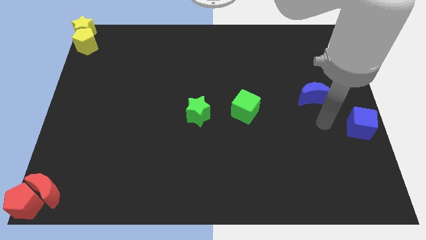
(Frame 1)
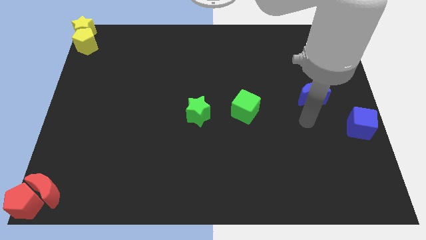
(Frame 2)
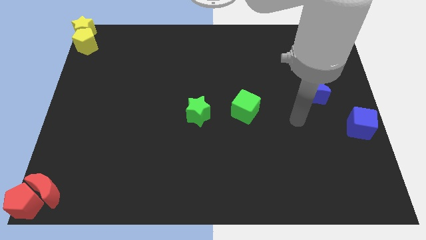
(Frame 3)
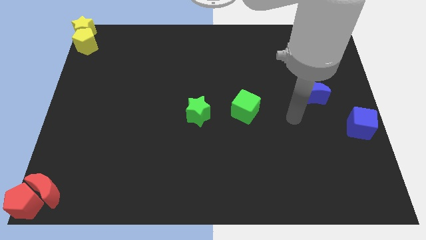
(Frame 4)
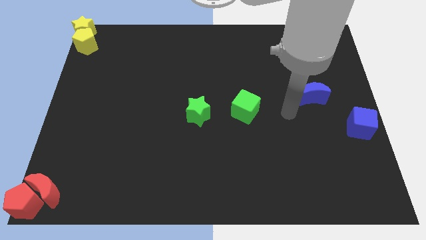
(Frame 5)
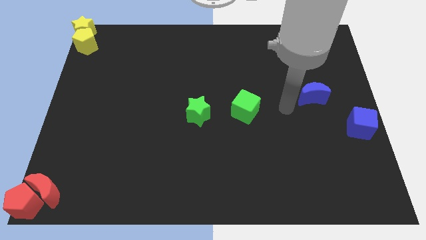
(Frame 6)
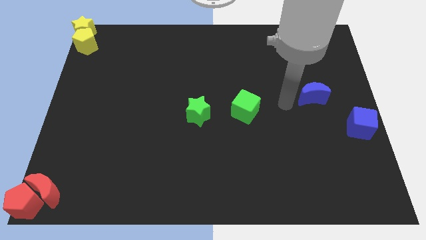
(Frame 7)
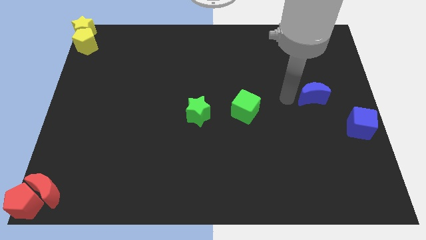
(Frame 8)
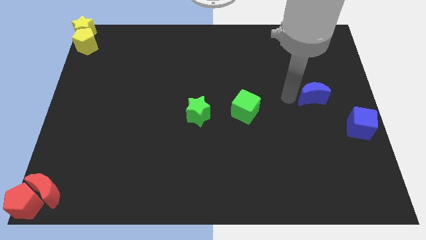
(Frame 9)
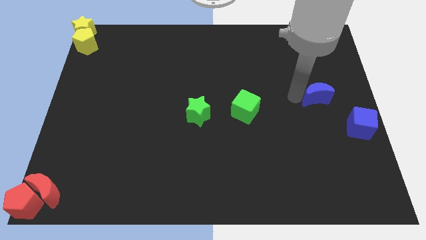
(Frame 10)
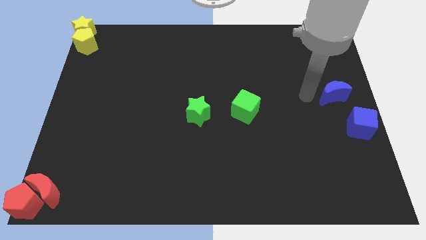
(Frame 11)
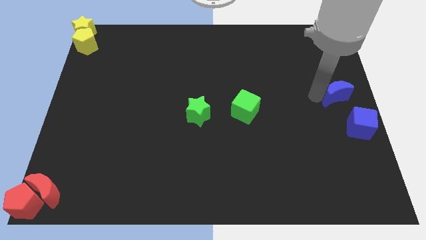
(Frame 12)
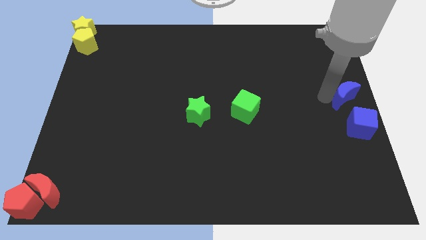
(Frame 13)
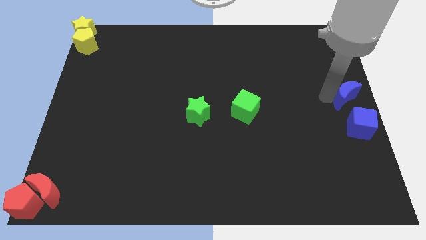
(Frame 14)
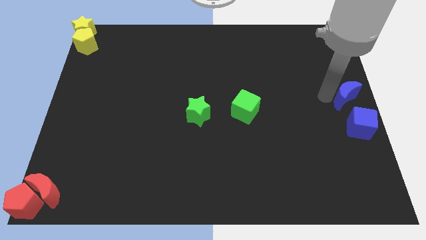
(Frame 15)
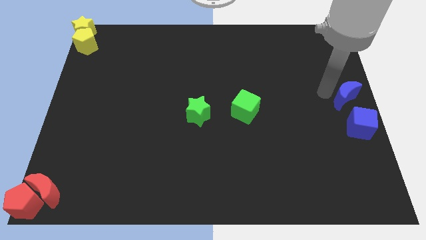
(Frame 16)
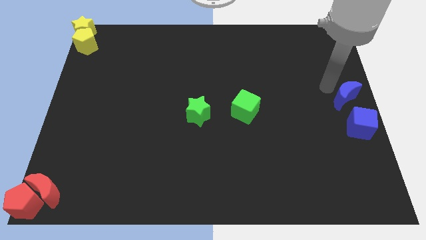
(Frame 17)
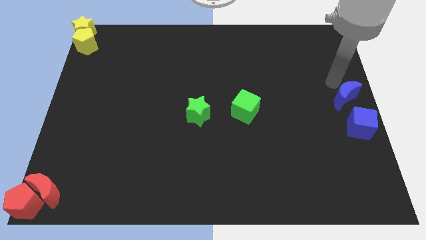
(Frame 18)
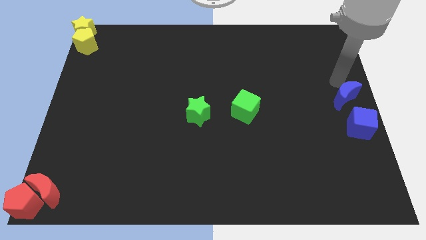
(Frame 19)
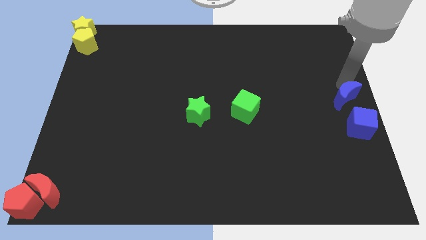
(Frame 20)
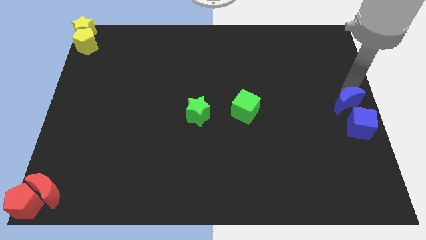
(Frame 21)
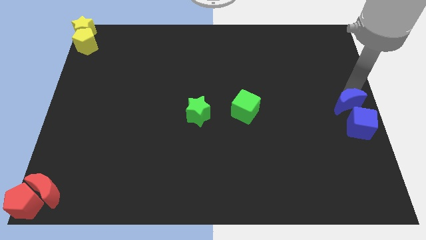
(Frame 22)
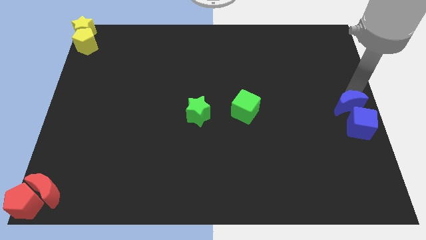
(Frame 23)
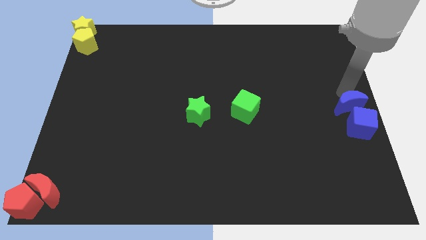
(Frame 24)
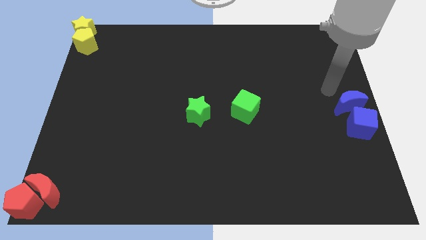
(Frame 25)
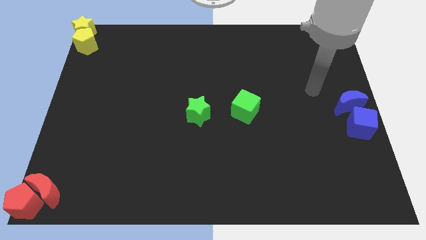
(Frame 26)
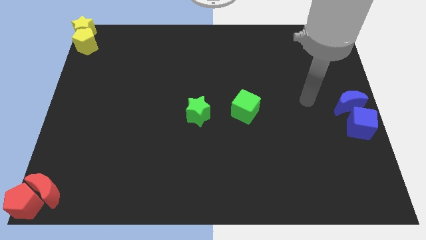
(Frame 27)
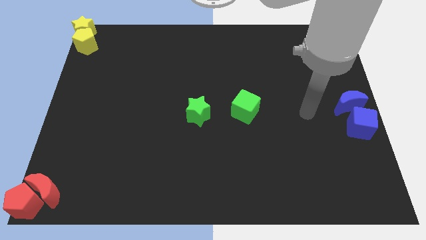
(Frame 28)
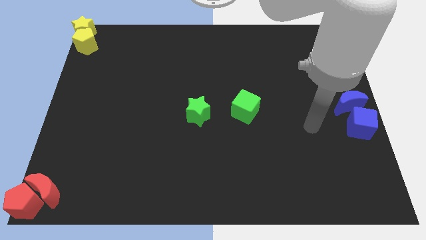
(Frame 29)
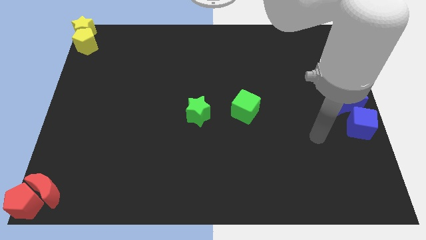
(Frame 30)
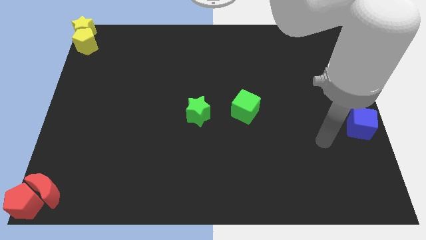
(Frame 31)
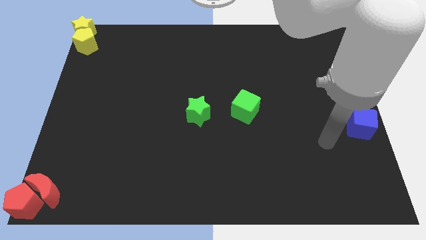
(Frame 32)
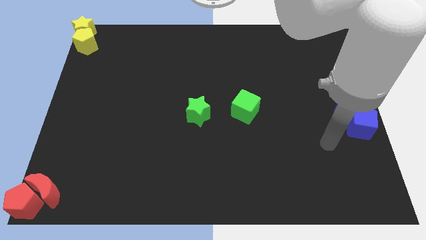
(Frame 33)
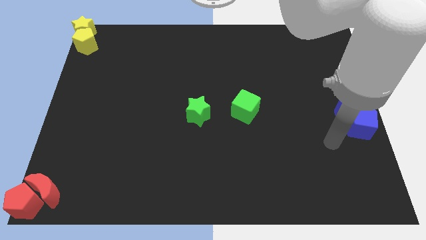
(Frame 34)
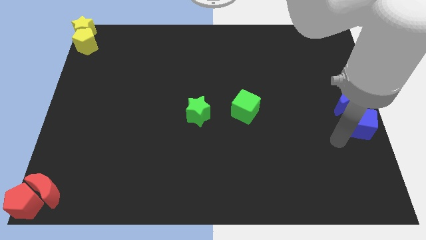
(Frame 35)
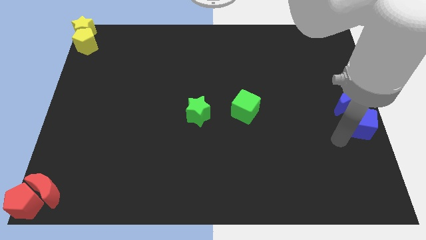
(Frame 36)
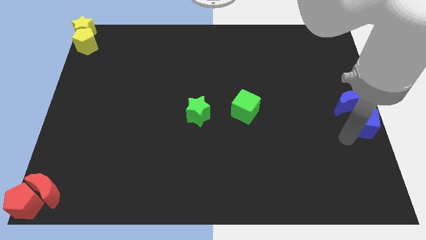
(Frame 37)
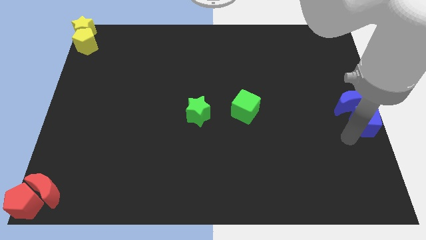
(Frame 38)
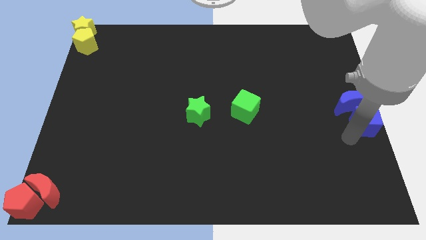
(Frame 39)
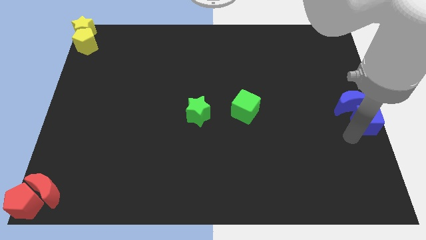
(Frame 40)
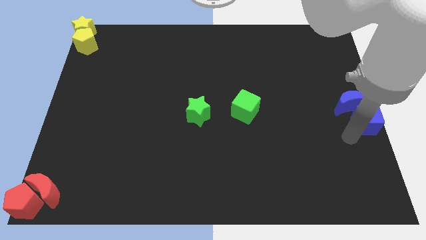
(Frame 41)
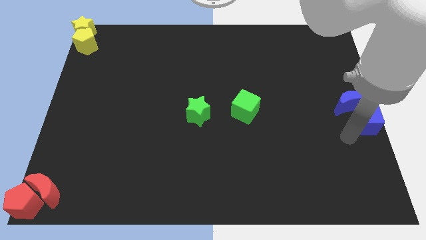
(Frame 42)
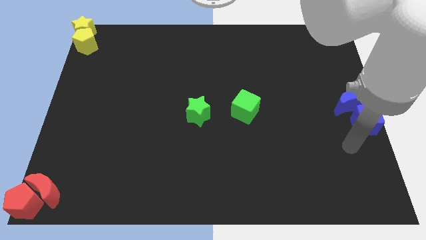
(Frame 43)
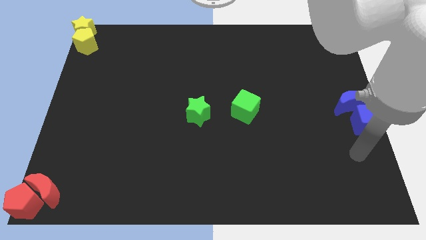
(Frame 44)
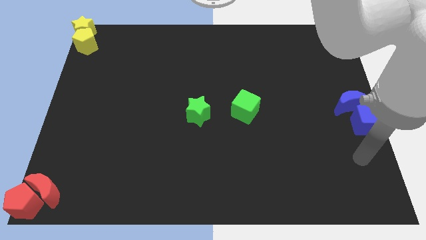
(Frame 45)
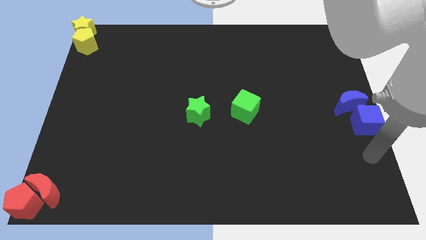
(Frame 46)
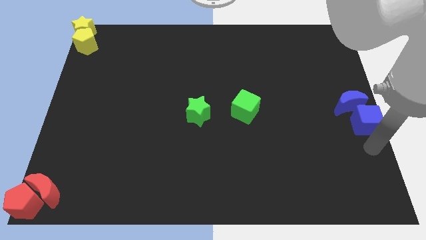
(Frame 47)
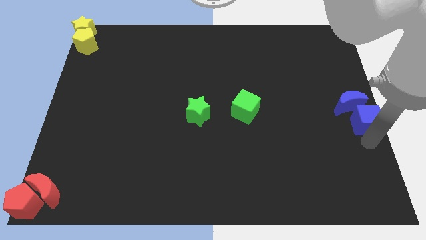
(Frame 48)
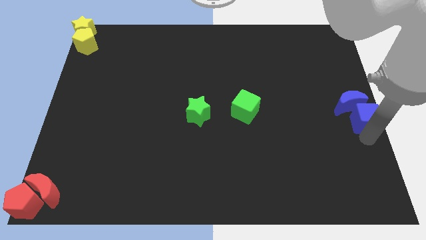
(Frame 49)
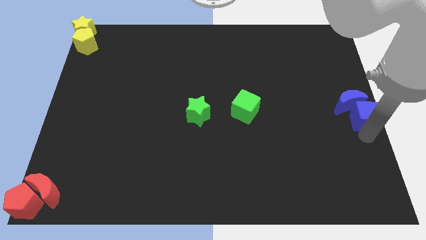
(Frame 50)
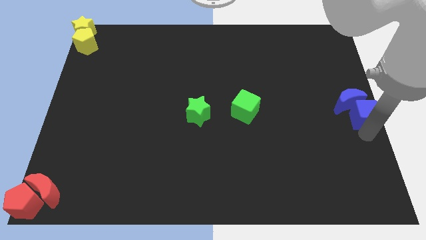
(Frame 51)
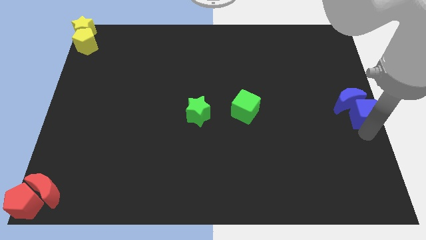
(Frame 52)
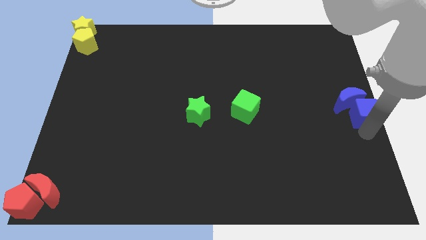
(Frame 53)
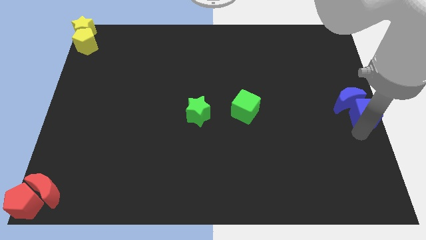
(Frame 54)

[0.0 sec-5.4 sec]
move the blue blocks to the right center of the board

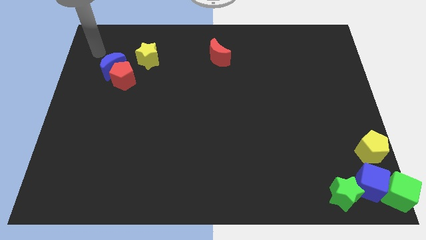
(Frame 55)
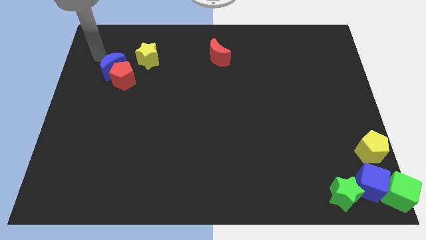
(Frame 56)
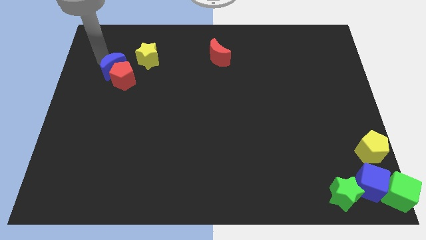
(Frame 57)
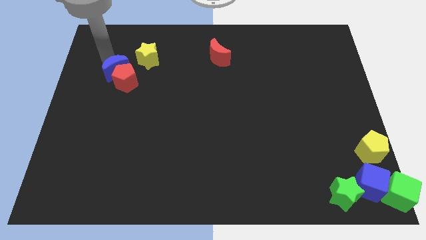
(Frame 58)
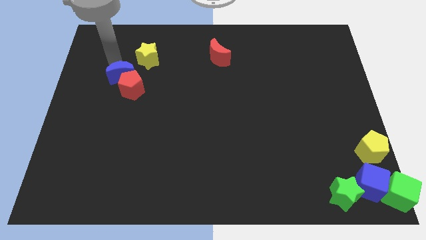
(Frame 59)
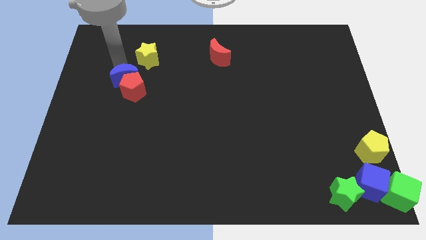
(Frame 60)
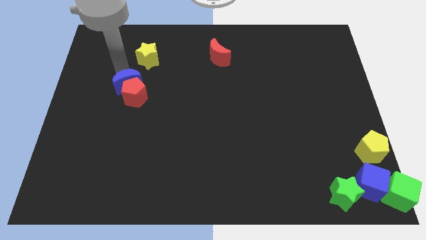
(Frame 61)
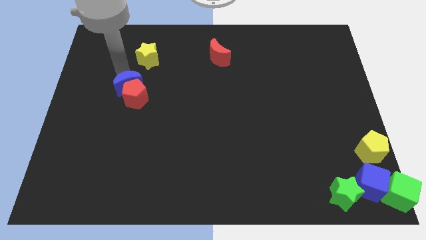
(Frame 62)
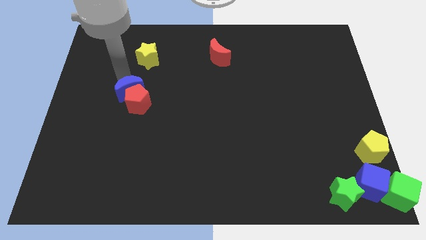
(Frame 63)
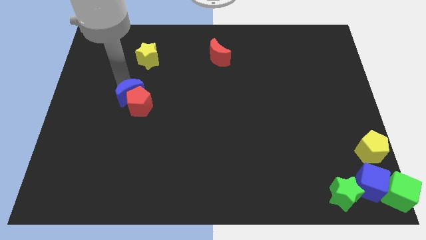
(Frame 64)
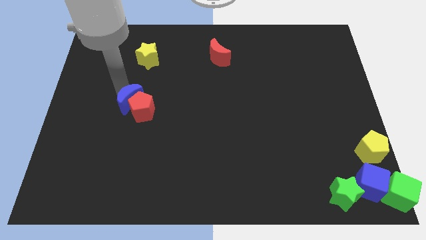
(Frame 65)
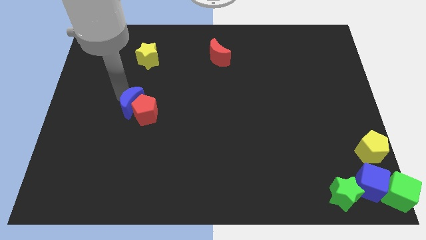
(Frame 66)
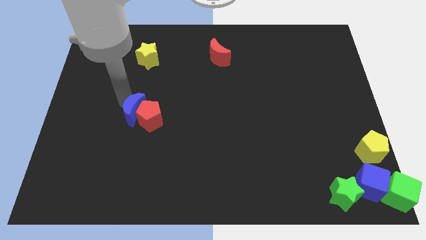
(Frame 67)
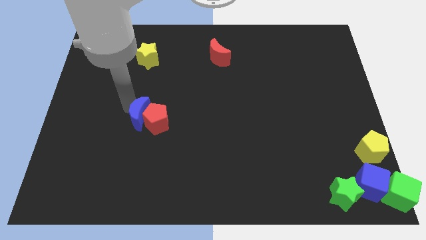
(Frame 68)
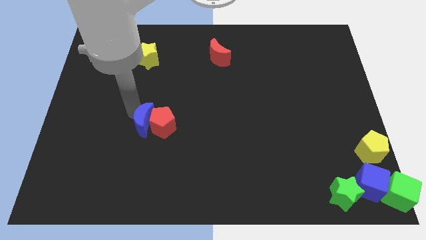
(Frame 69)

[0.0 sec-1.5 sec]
drag the blue moon and red pentagon towards the bottom side

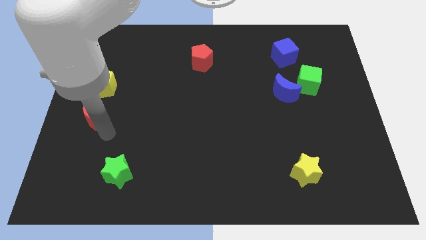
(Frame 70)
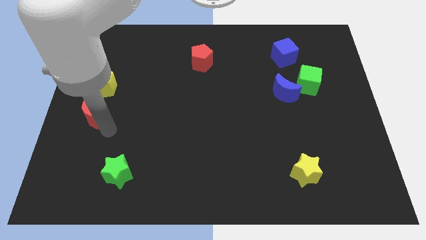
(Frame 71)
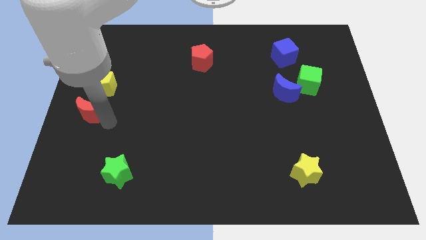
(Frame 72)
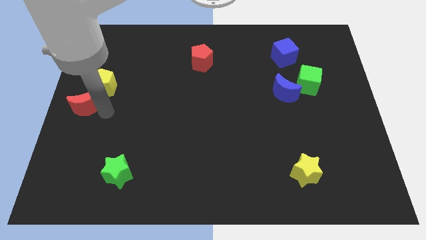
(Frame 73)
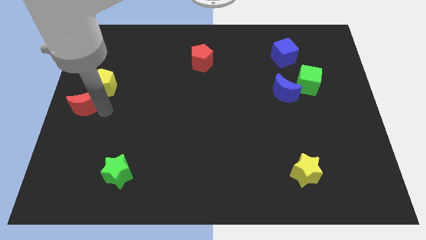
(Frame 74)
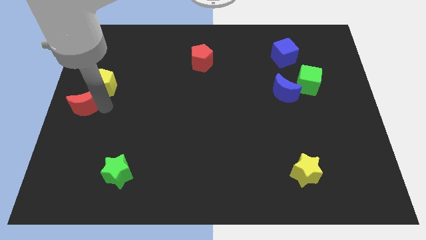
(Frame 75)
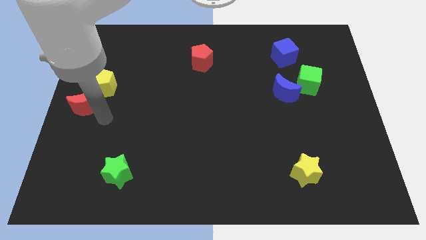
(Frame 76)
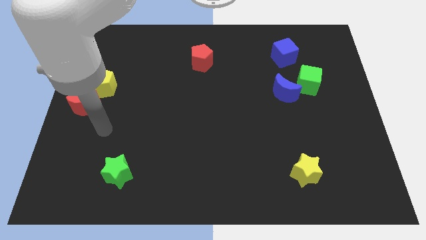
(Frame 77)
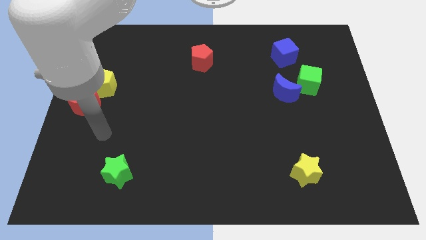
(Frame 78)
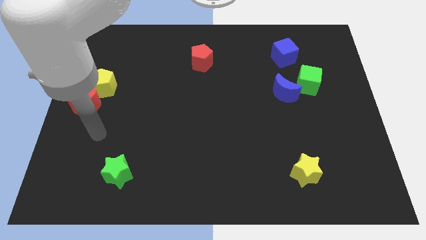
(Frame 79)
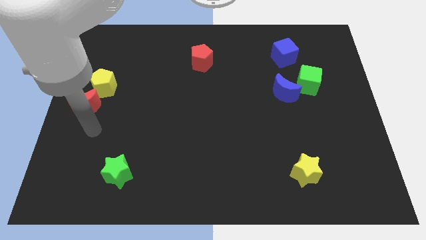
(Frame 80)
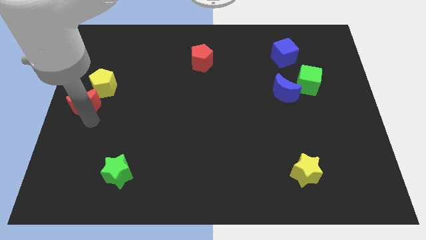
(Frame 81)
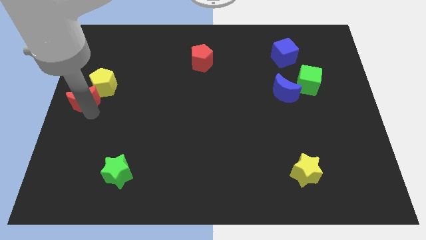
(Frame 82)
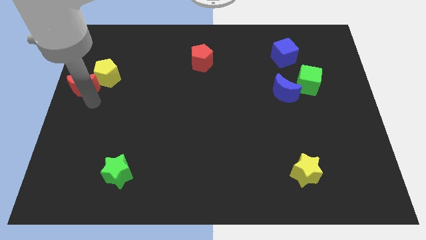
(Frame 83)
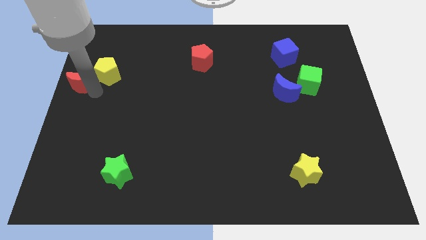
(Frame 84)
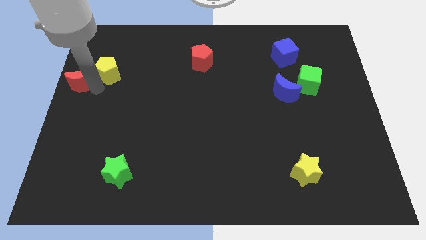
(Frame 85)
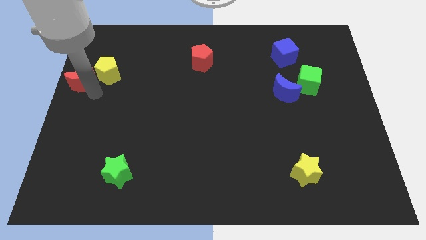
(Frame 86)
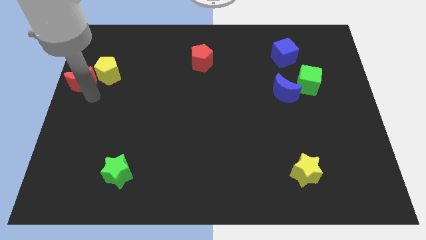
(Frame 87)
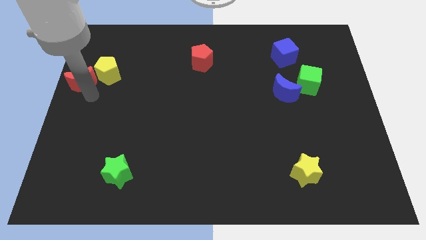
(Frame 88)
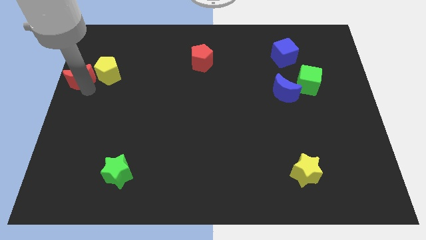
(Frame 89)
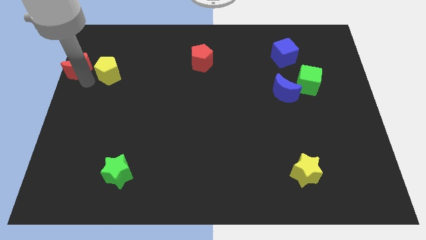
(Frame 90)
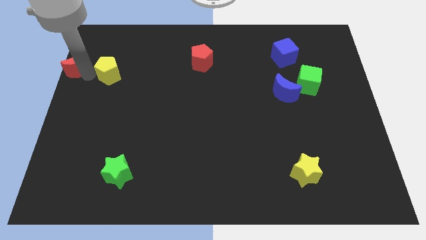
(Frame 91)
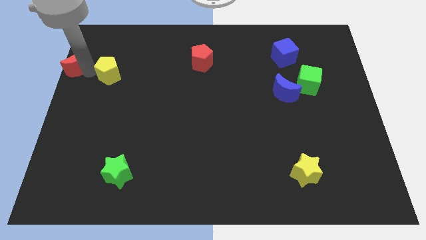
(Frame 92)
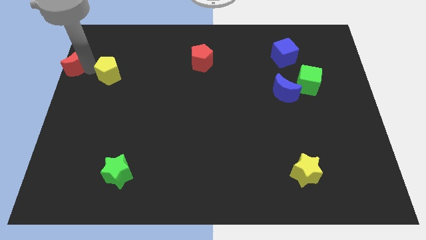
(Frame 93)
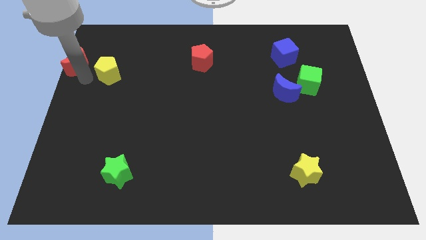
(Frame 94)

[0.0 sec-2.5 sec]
place the red moon to the left of the yellow pentagon
